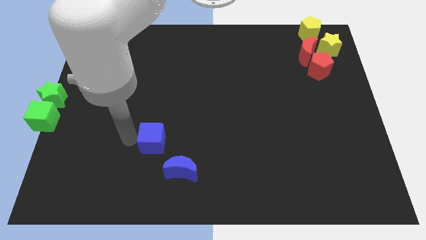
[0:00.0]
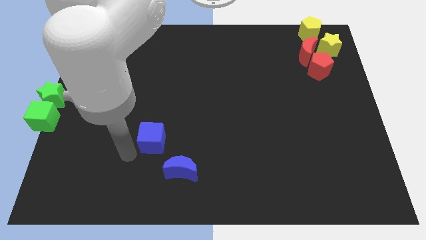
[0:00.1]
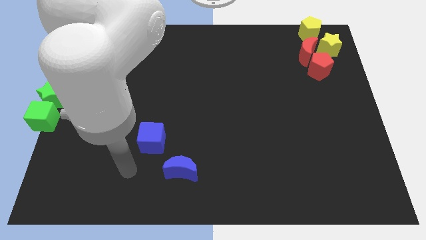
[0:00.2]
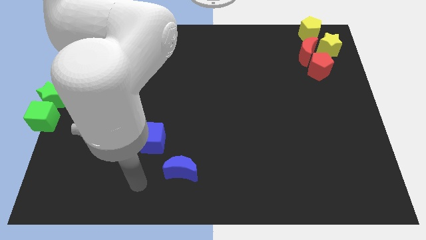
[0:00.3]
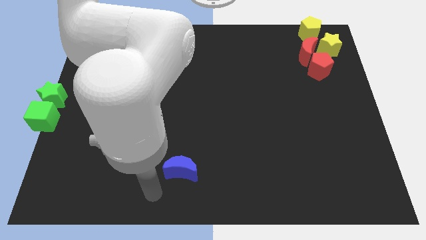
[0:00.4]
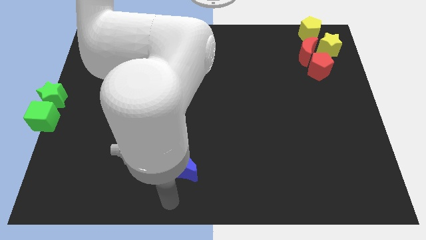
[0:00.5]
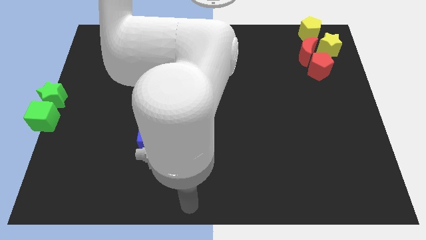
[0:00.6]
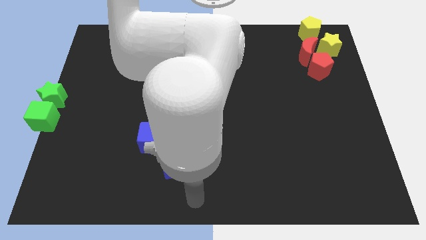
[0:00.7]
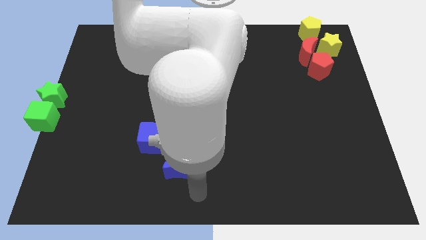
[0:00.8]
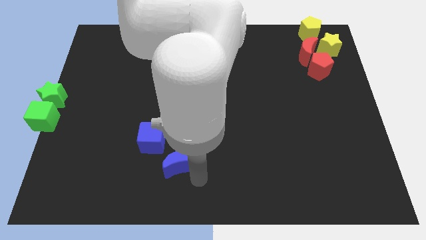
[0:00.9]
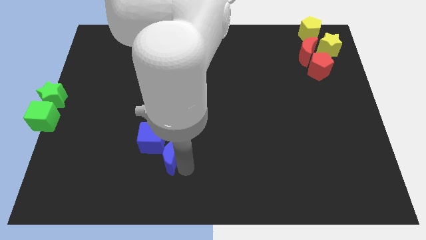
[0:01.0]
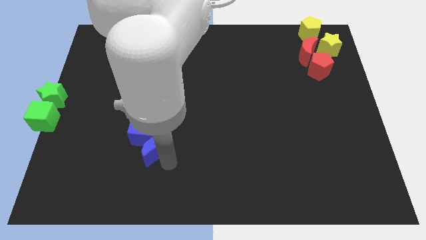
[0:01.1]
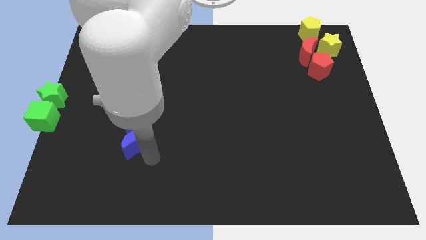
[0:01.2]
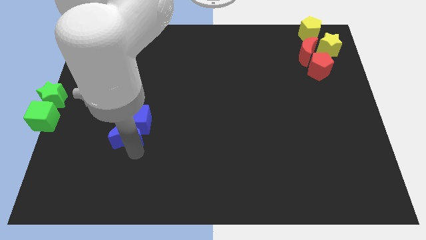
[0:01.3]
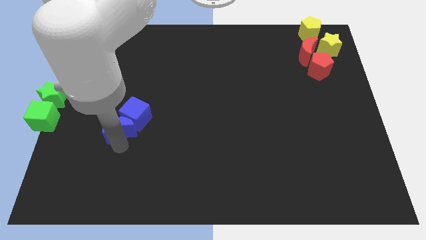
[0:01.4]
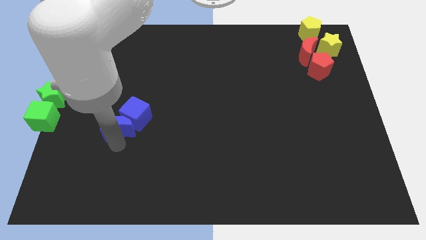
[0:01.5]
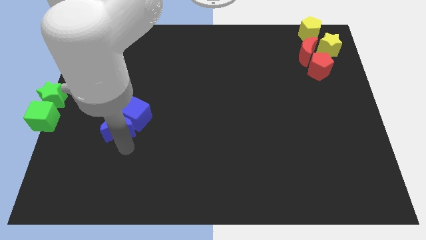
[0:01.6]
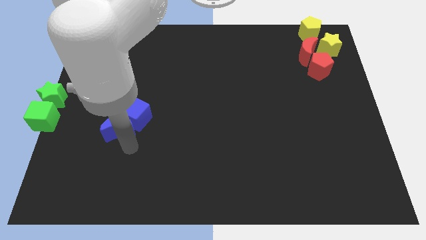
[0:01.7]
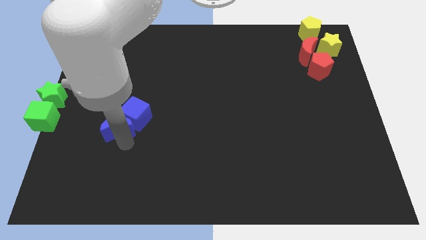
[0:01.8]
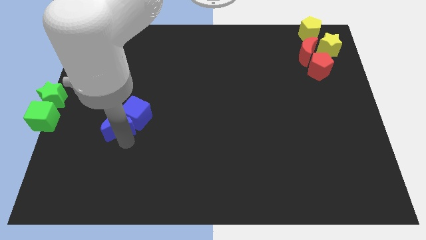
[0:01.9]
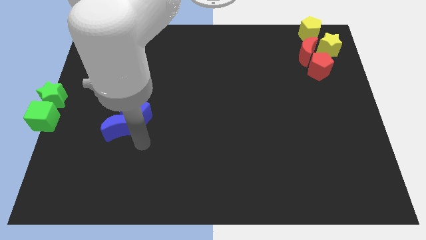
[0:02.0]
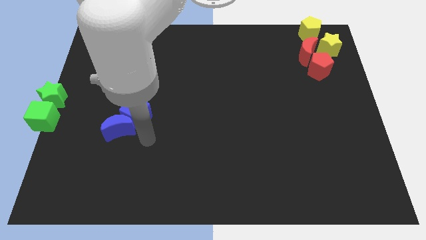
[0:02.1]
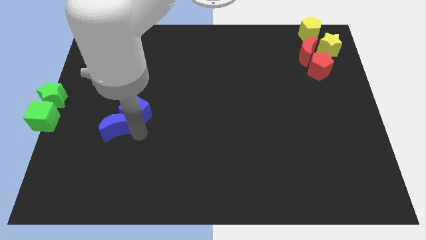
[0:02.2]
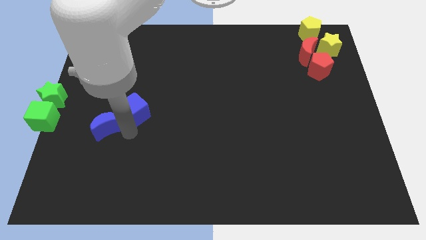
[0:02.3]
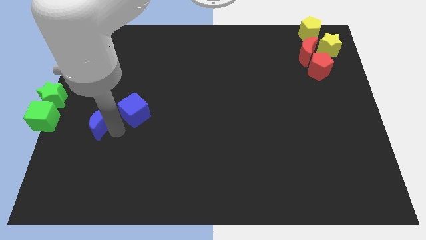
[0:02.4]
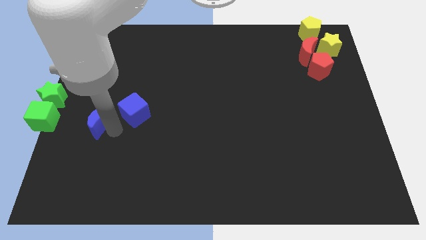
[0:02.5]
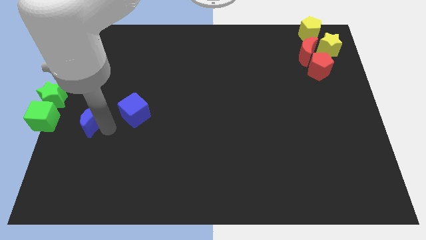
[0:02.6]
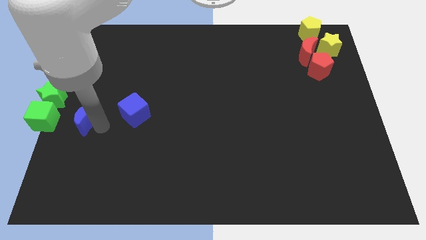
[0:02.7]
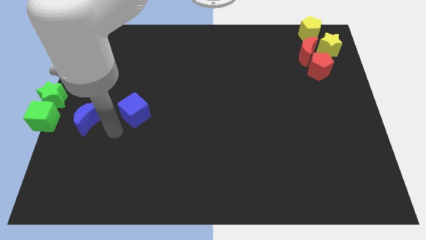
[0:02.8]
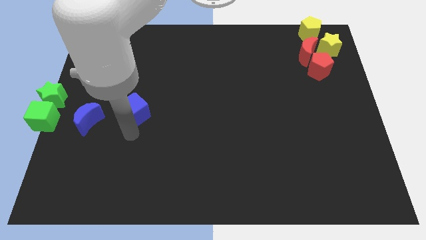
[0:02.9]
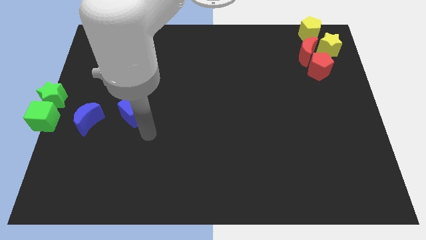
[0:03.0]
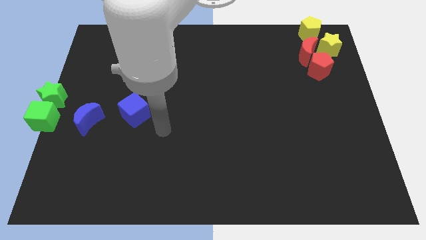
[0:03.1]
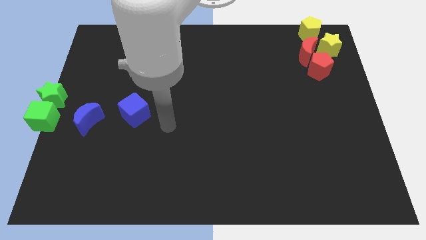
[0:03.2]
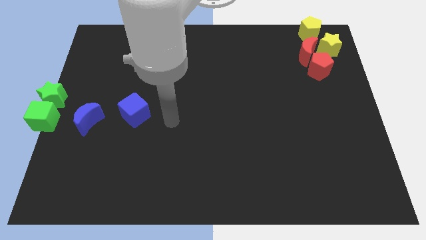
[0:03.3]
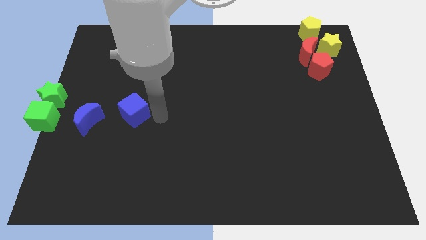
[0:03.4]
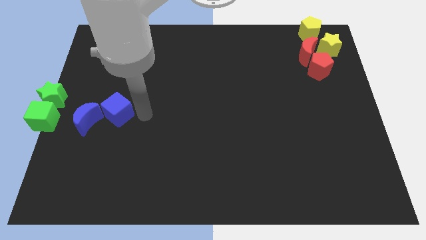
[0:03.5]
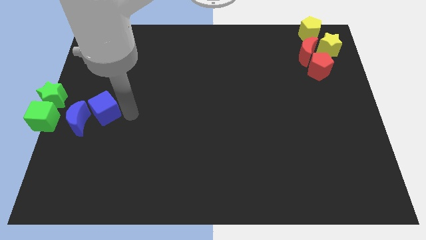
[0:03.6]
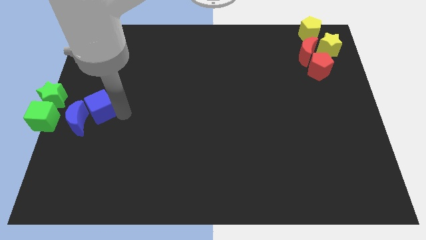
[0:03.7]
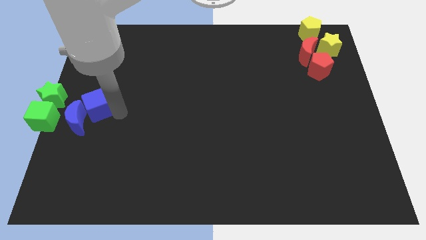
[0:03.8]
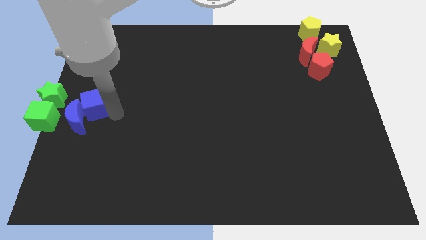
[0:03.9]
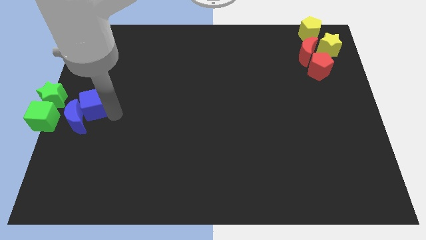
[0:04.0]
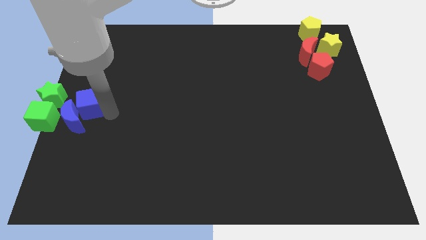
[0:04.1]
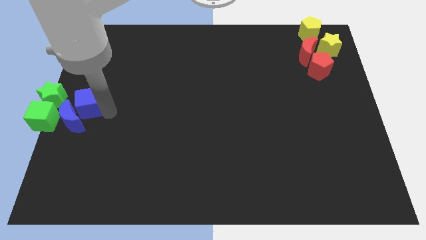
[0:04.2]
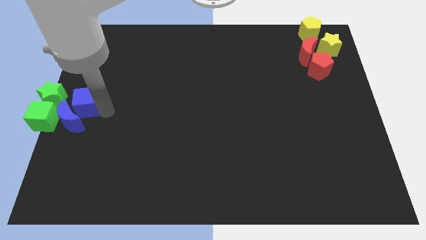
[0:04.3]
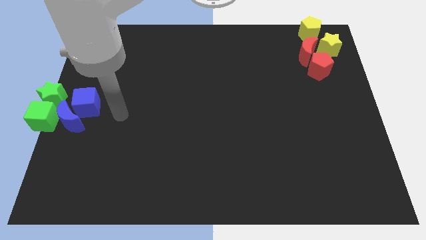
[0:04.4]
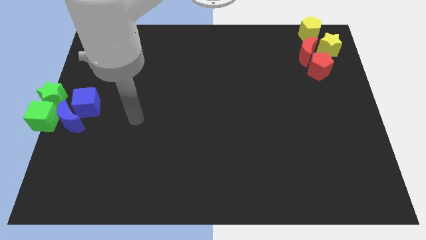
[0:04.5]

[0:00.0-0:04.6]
push the blue crescent and blue cube to the left center

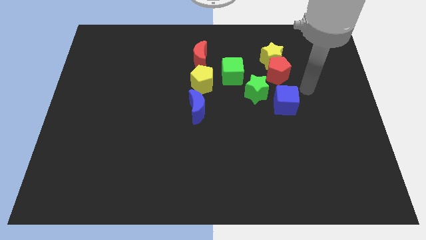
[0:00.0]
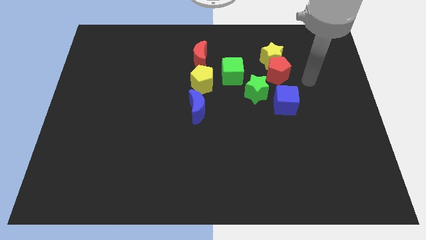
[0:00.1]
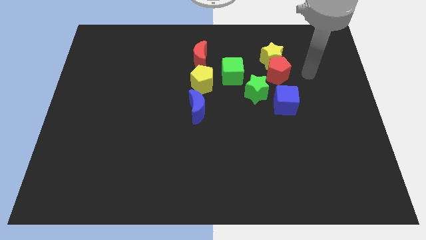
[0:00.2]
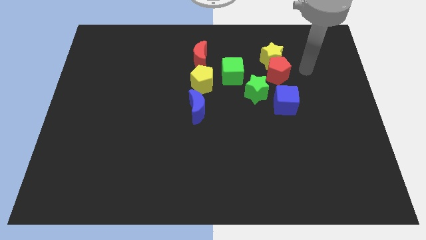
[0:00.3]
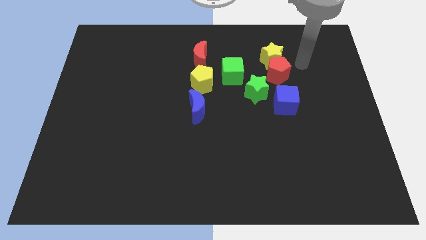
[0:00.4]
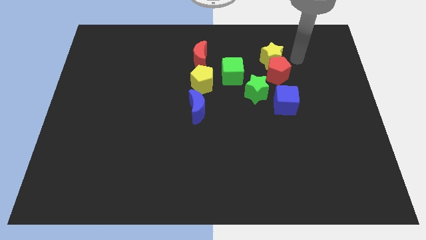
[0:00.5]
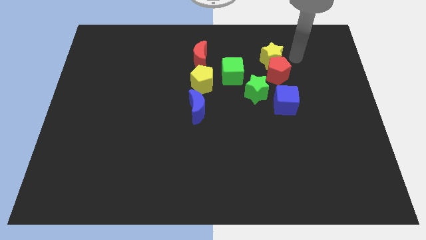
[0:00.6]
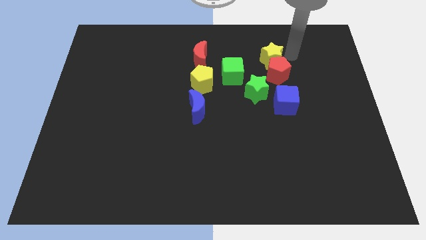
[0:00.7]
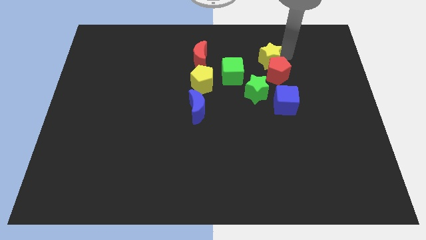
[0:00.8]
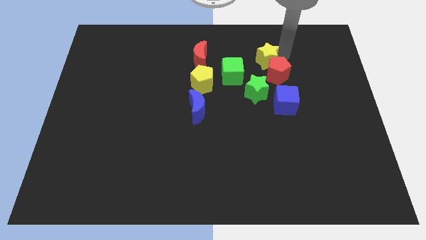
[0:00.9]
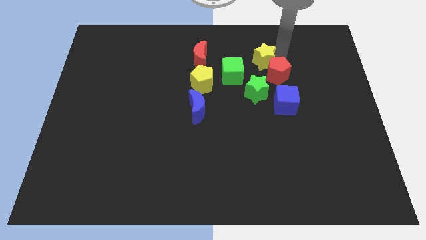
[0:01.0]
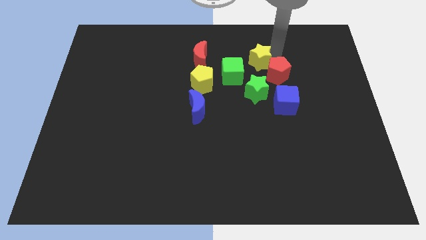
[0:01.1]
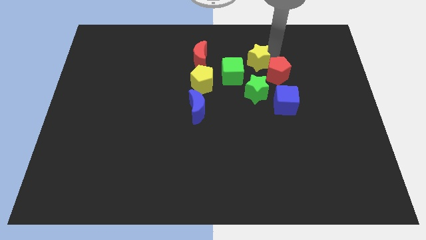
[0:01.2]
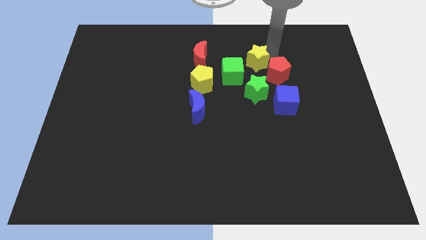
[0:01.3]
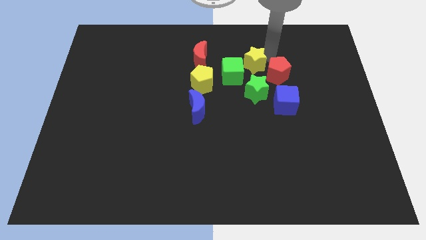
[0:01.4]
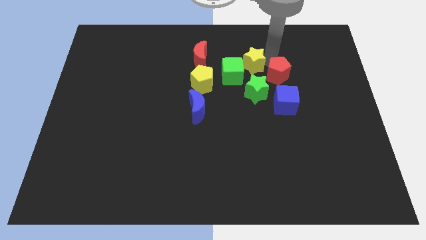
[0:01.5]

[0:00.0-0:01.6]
move yellow star to the top right of green cube

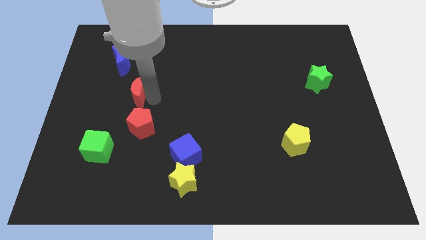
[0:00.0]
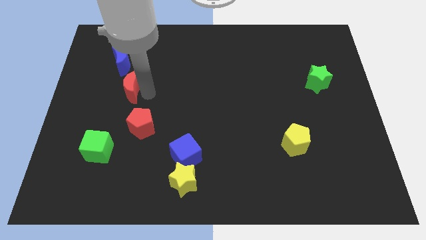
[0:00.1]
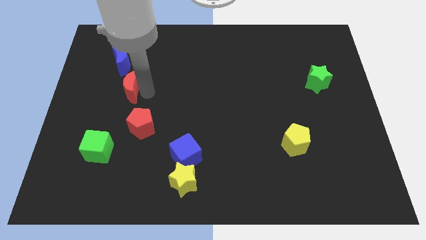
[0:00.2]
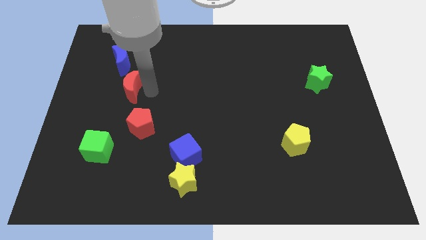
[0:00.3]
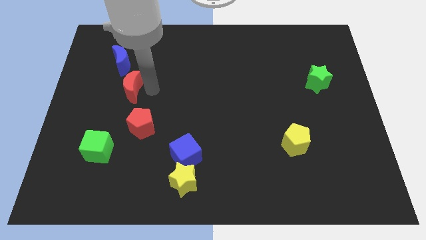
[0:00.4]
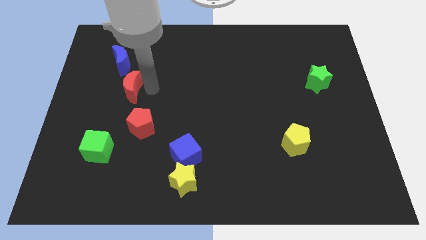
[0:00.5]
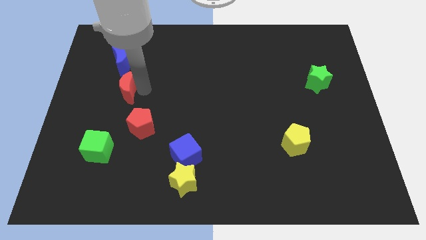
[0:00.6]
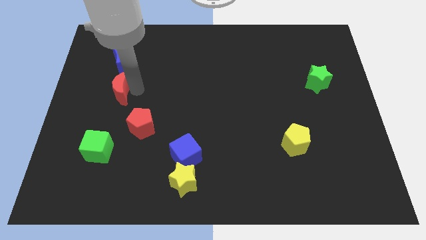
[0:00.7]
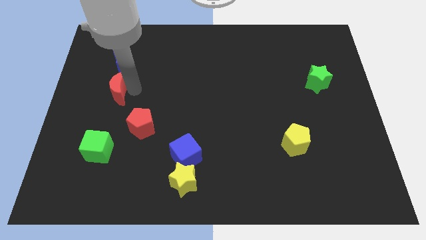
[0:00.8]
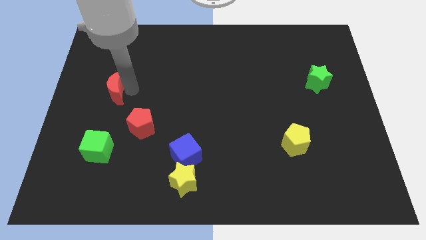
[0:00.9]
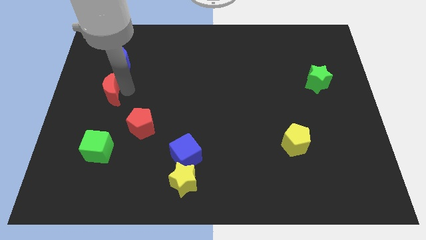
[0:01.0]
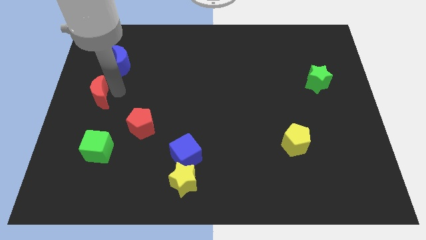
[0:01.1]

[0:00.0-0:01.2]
push the red crescent vertically to the bottom of the blue crescent

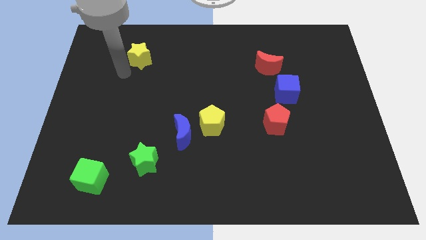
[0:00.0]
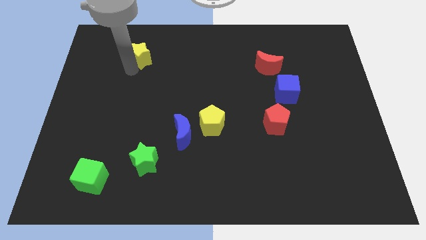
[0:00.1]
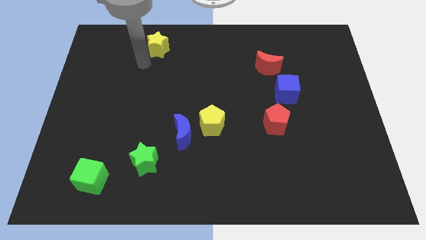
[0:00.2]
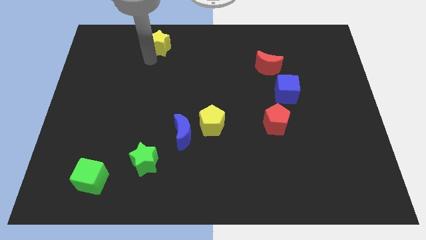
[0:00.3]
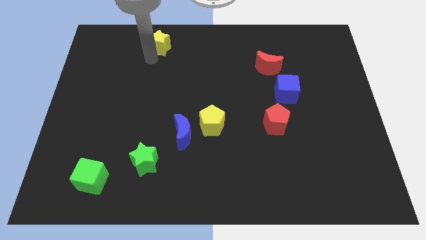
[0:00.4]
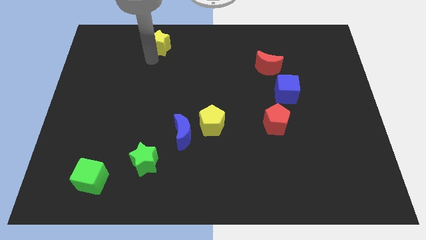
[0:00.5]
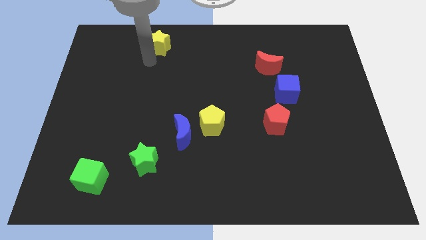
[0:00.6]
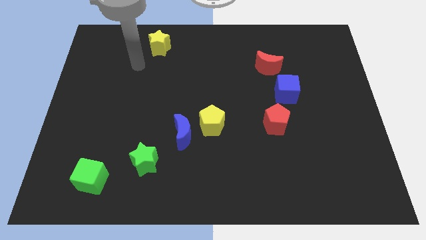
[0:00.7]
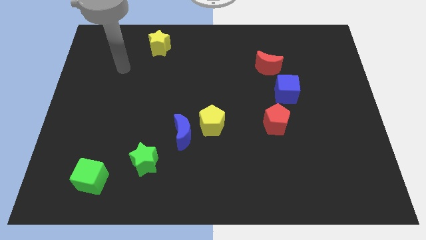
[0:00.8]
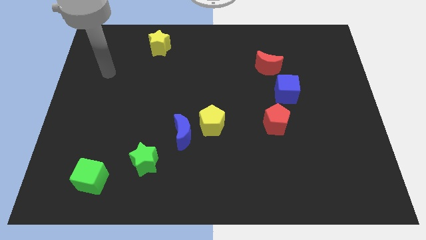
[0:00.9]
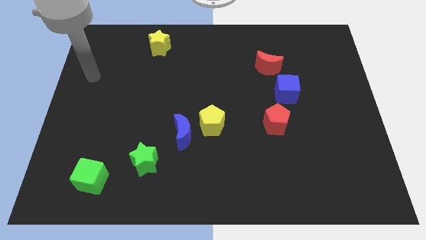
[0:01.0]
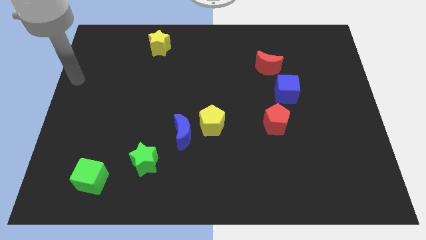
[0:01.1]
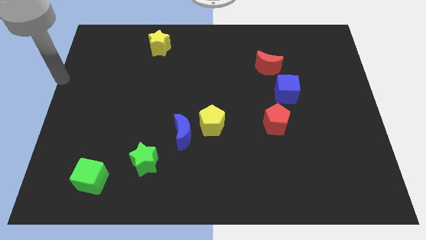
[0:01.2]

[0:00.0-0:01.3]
put the yellow star diagonally top right to the green cube

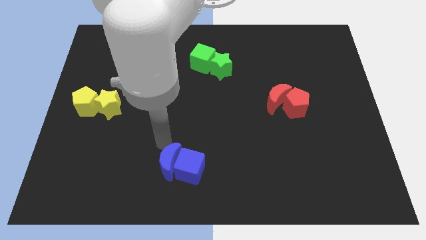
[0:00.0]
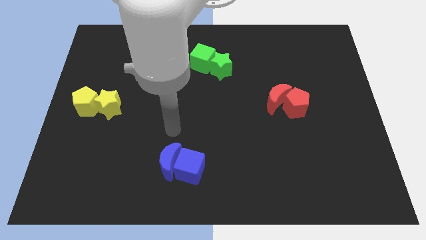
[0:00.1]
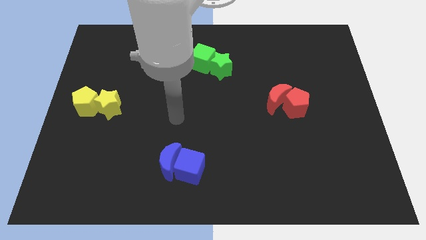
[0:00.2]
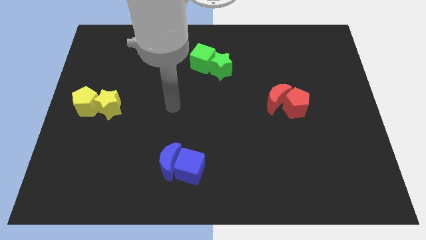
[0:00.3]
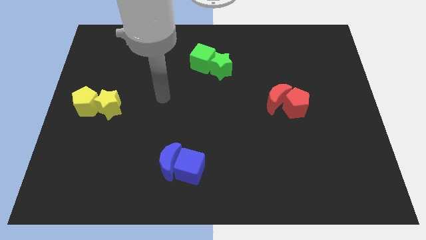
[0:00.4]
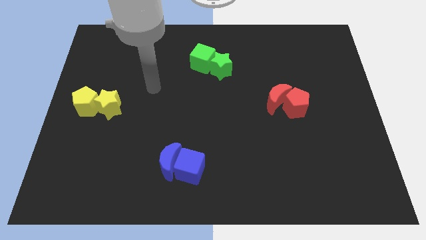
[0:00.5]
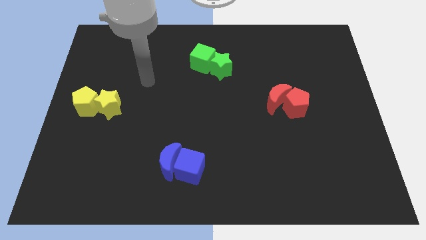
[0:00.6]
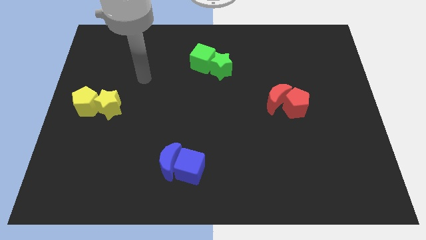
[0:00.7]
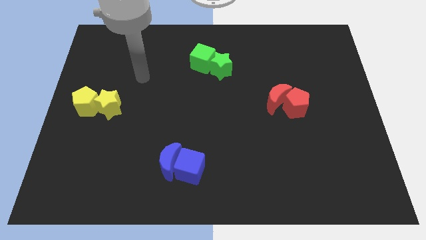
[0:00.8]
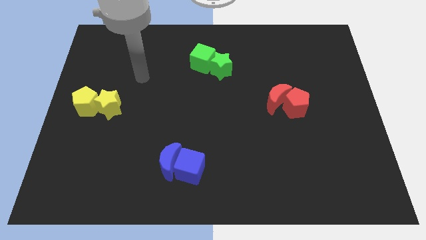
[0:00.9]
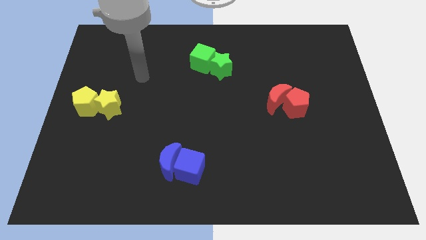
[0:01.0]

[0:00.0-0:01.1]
move arm towards the left side of the board
